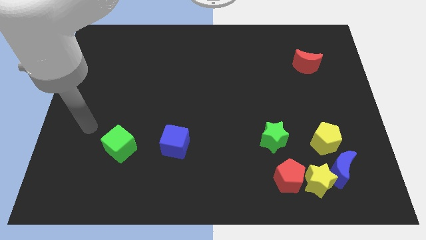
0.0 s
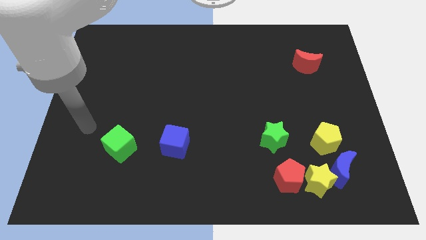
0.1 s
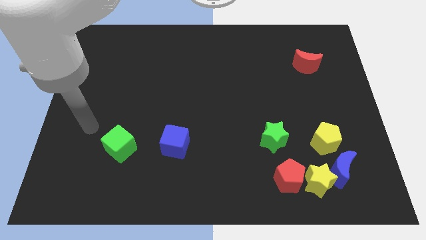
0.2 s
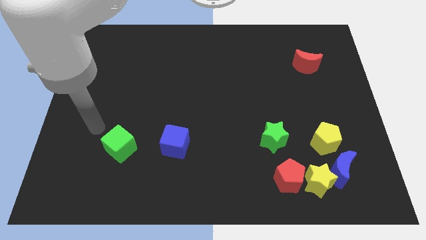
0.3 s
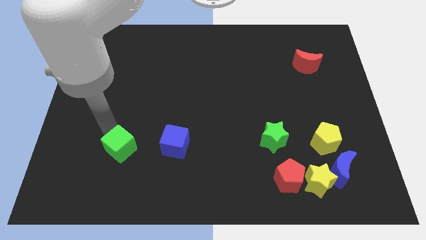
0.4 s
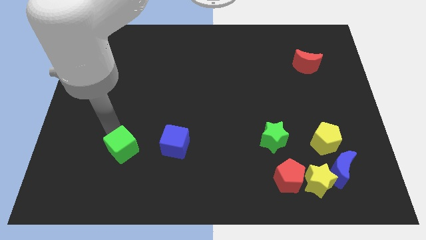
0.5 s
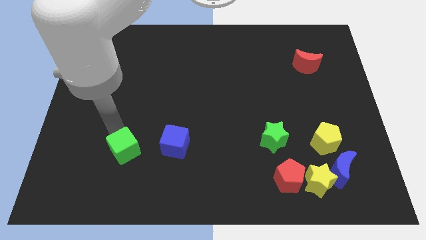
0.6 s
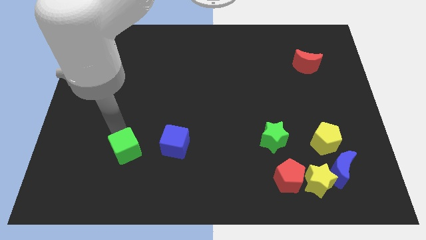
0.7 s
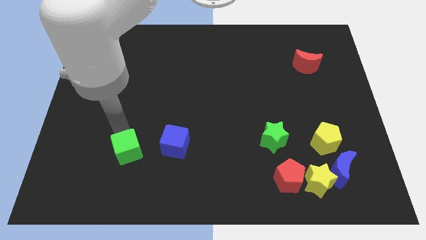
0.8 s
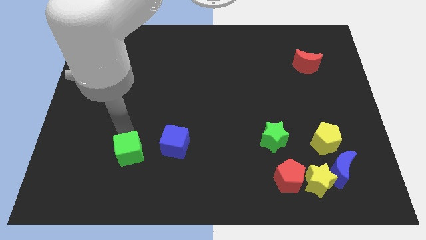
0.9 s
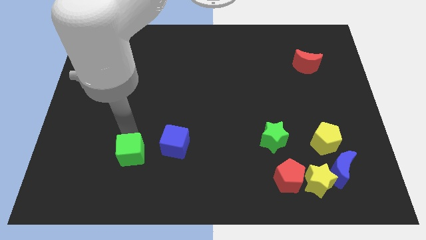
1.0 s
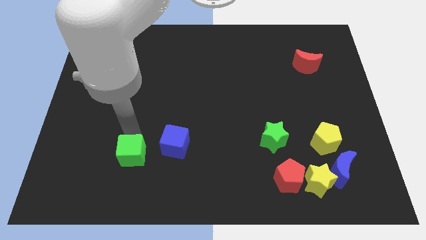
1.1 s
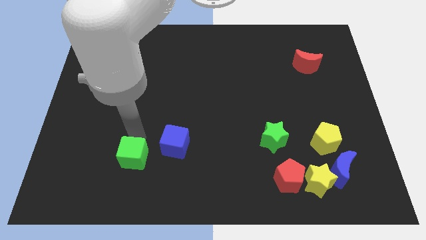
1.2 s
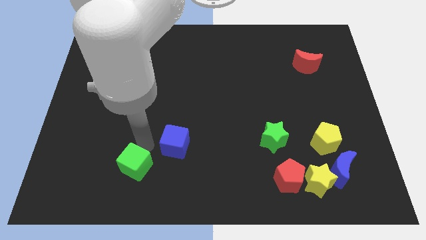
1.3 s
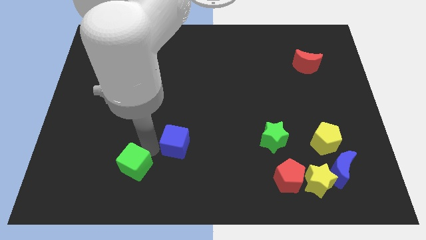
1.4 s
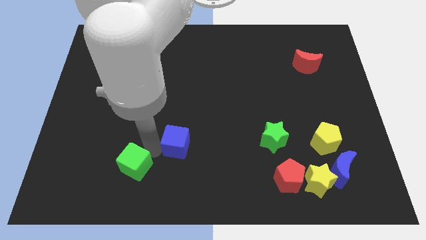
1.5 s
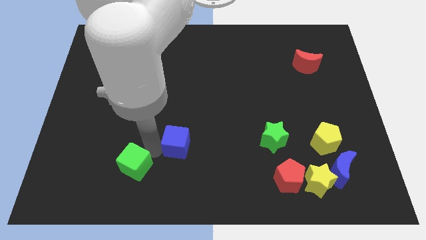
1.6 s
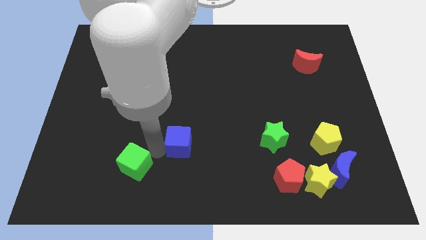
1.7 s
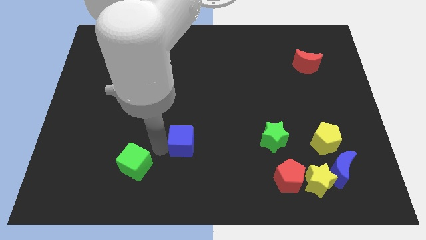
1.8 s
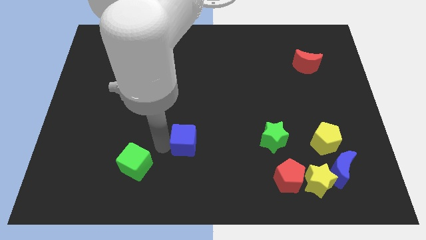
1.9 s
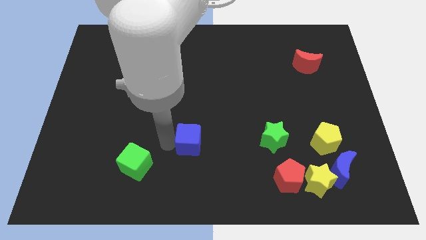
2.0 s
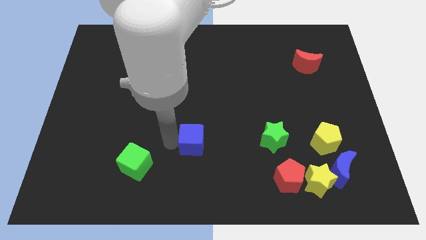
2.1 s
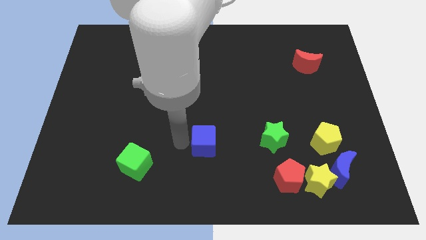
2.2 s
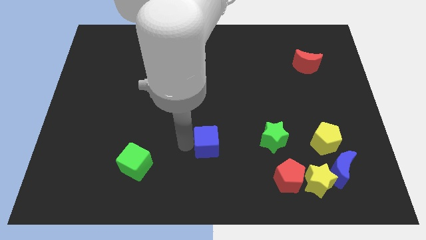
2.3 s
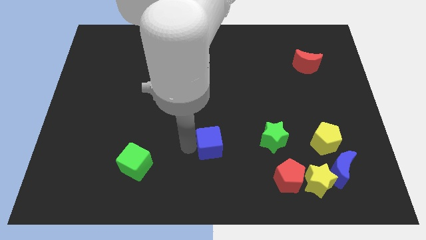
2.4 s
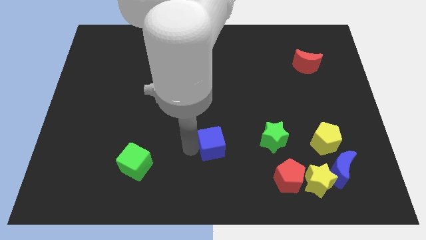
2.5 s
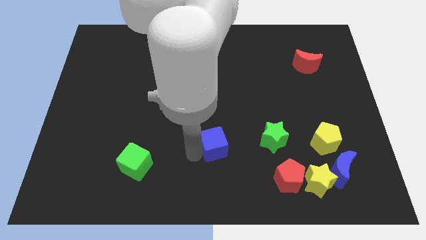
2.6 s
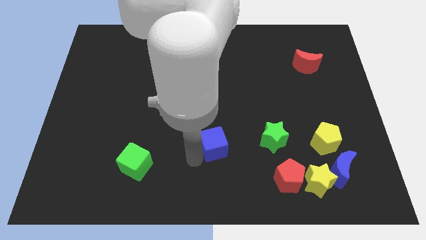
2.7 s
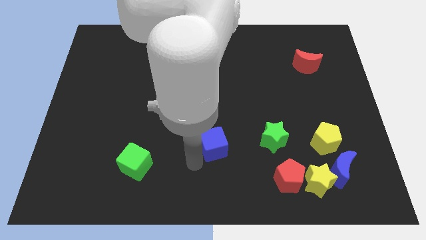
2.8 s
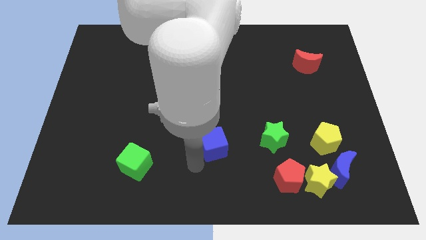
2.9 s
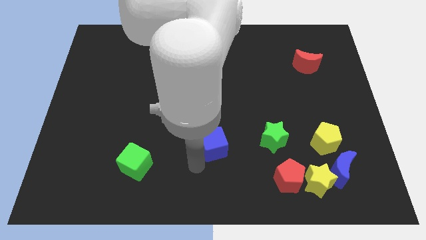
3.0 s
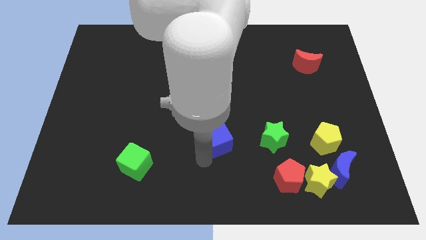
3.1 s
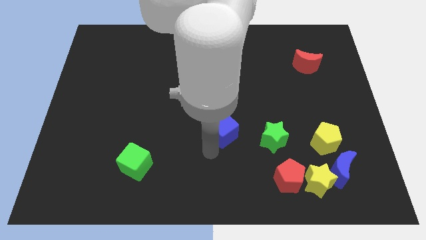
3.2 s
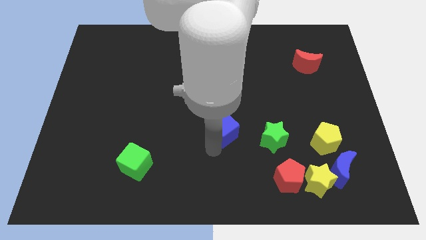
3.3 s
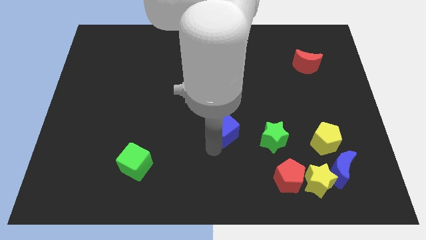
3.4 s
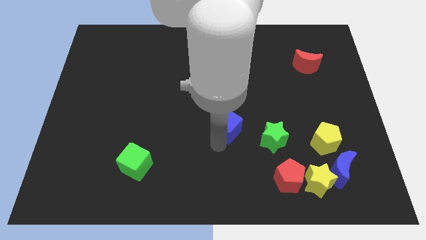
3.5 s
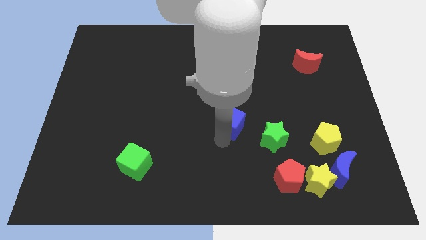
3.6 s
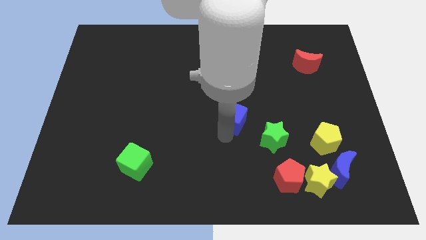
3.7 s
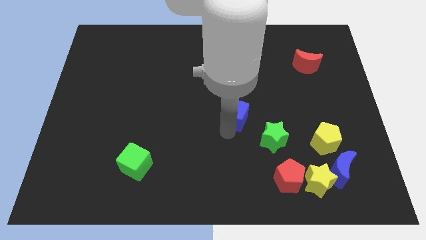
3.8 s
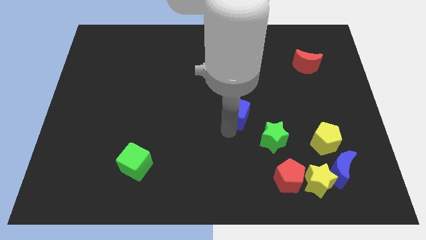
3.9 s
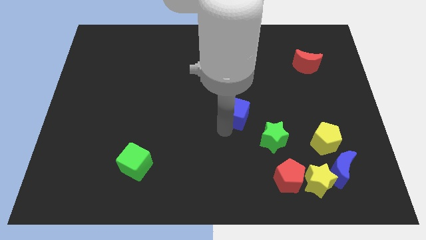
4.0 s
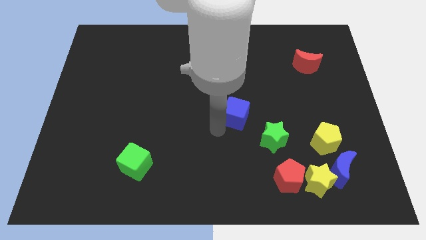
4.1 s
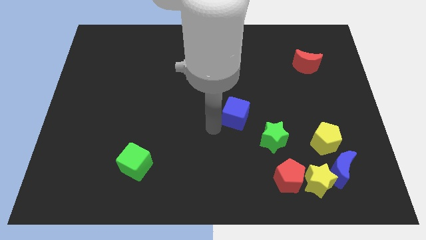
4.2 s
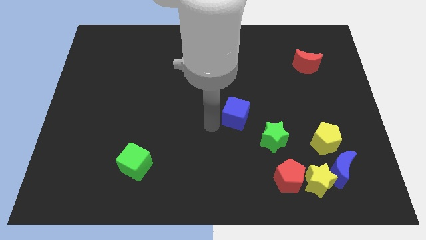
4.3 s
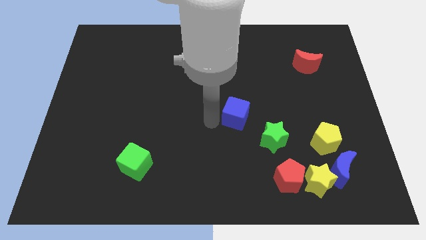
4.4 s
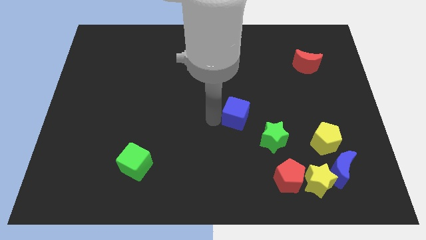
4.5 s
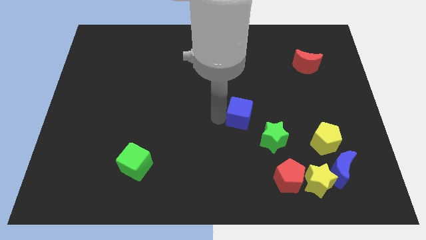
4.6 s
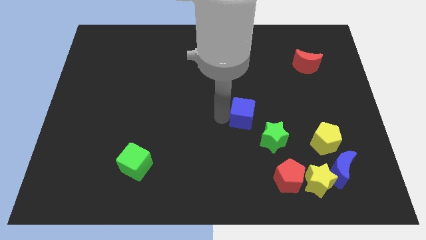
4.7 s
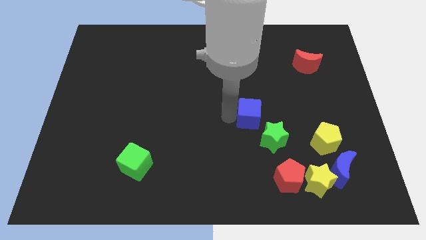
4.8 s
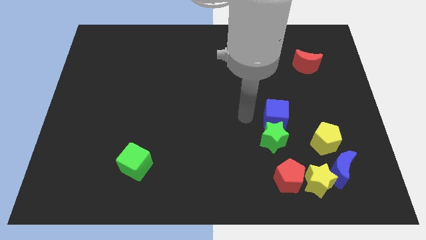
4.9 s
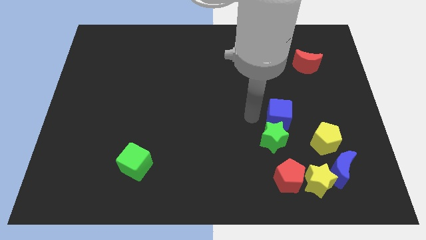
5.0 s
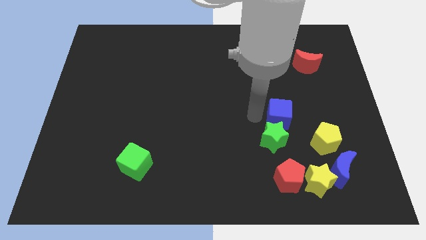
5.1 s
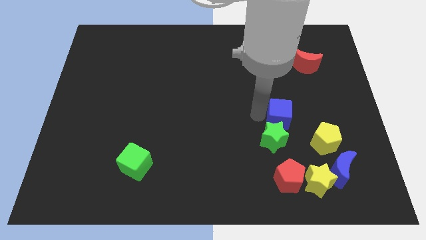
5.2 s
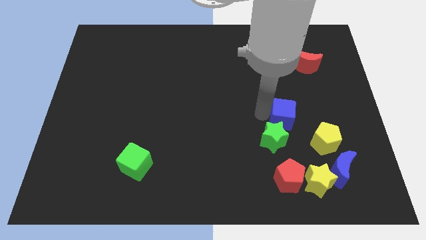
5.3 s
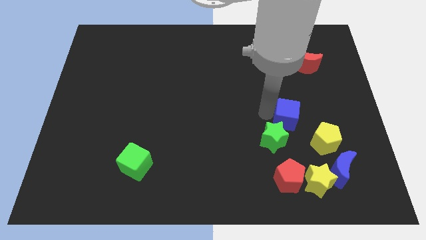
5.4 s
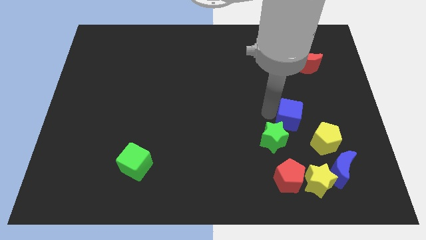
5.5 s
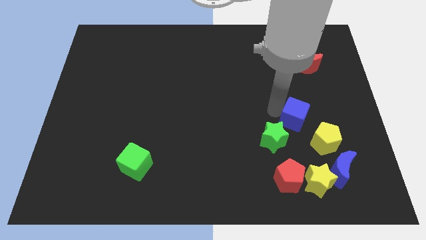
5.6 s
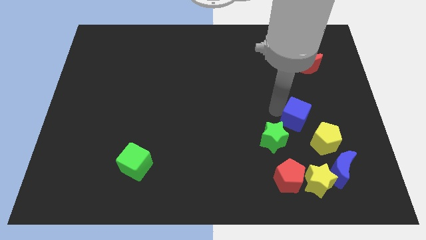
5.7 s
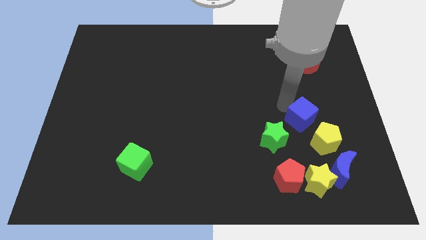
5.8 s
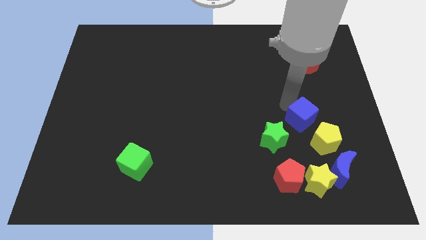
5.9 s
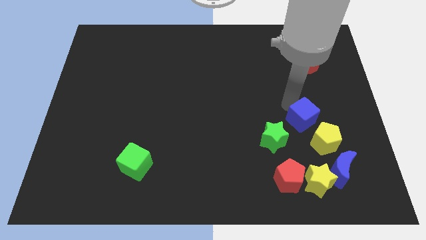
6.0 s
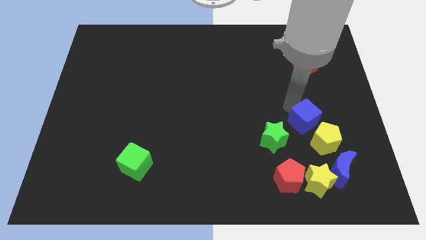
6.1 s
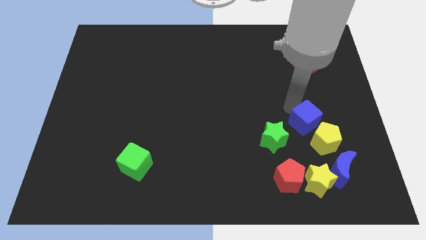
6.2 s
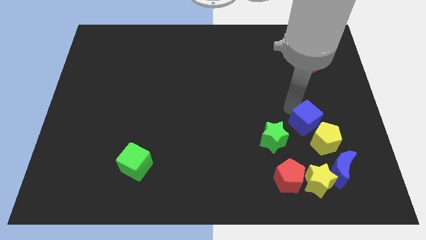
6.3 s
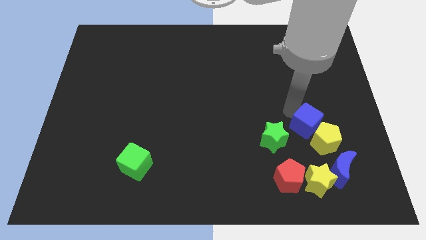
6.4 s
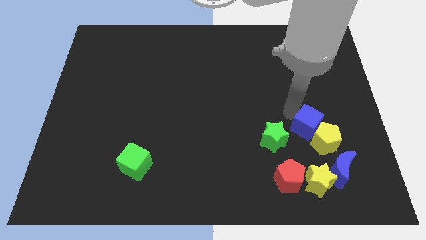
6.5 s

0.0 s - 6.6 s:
slide the blue cube close to the yellow pentagon

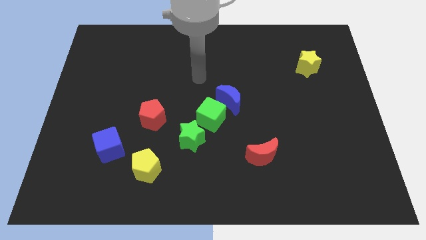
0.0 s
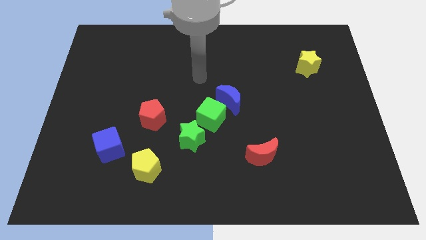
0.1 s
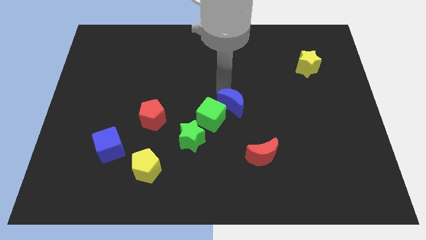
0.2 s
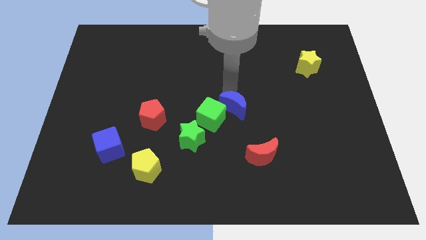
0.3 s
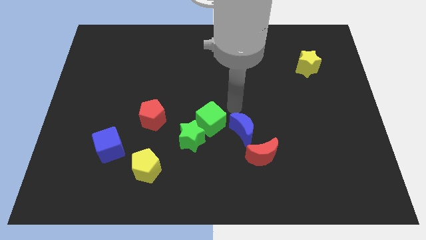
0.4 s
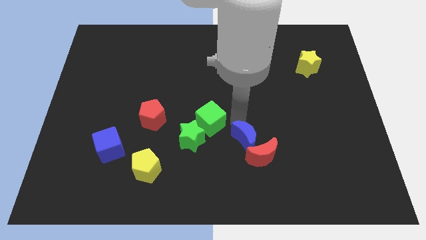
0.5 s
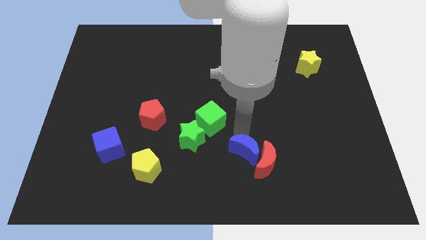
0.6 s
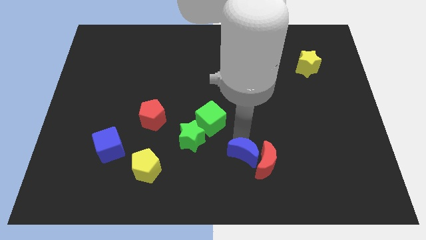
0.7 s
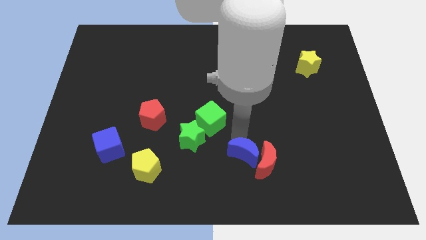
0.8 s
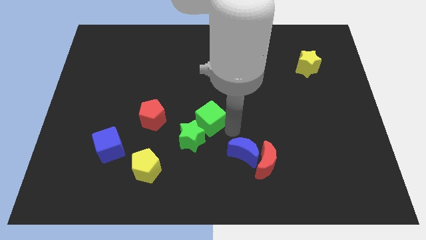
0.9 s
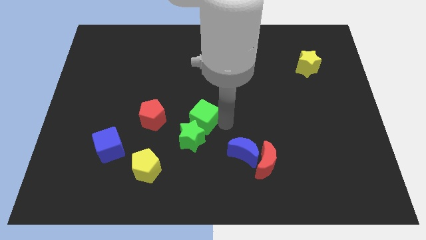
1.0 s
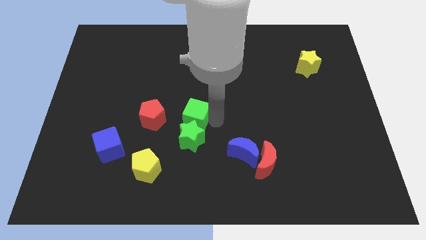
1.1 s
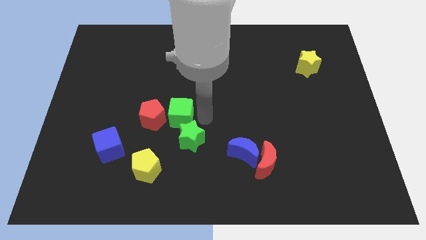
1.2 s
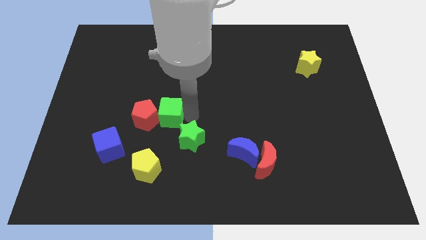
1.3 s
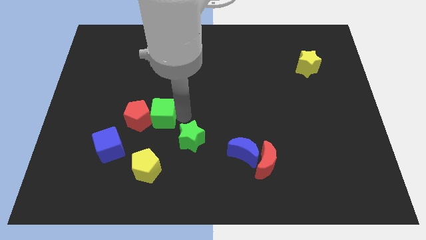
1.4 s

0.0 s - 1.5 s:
slide the green cube to the red pentagon

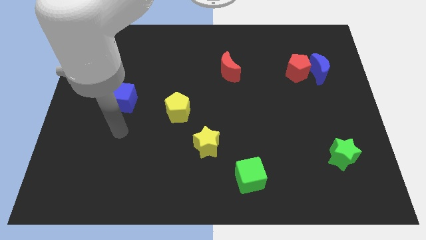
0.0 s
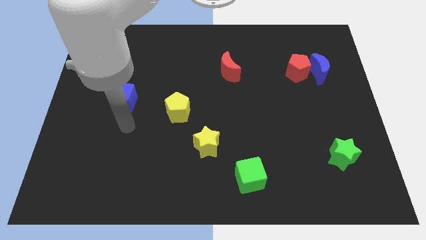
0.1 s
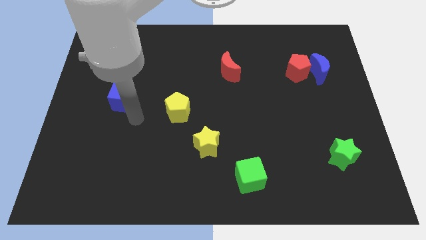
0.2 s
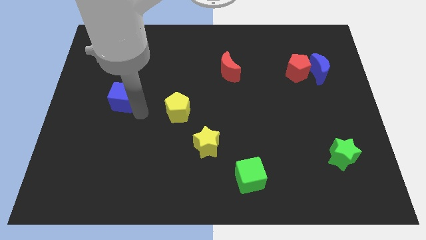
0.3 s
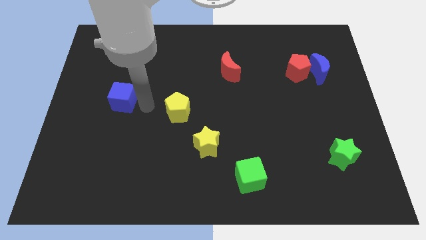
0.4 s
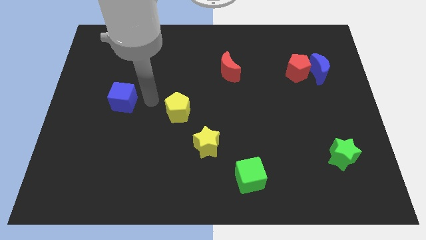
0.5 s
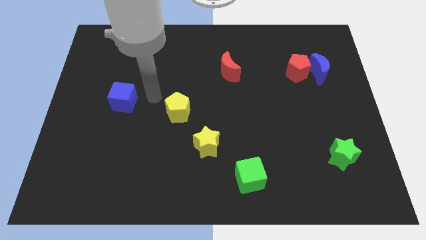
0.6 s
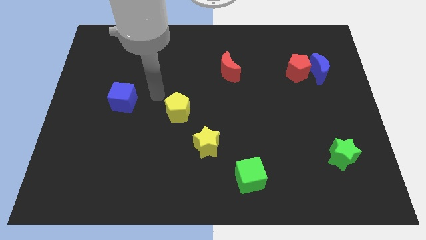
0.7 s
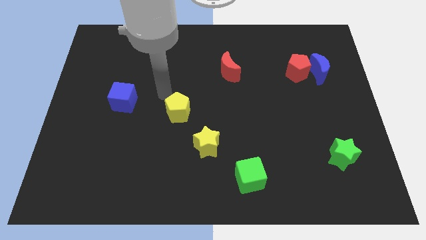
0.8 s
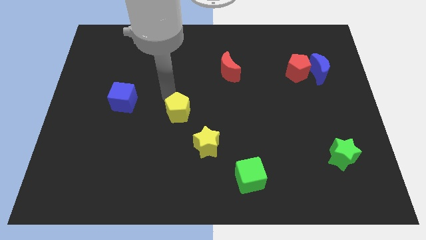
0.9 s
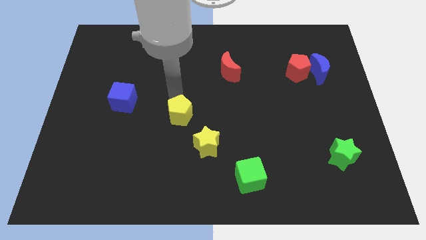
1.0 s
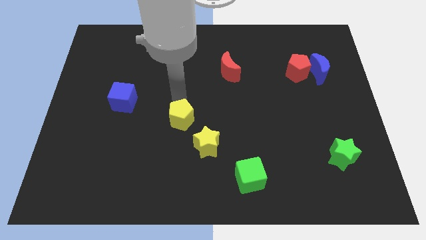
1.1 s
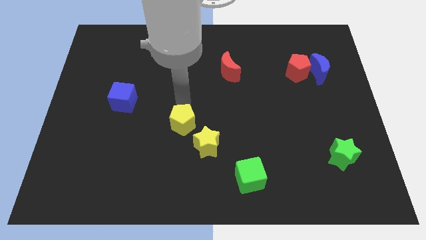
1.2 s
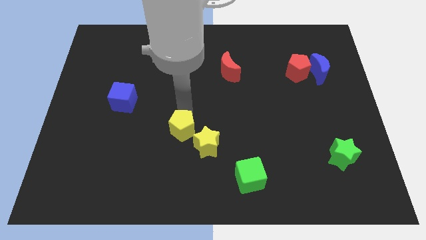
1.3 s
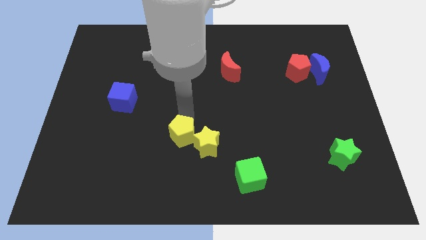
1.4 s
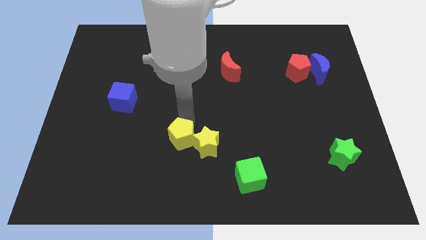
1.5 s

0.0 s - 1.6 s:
push the yellow pentagon close to the yellow star
